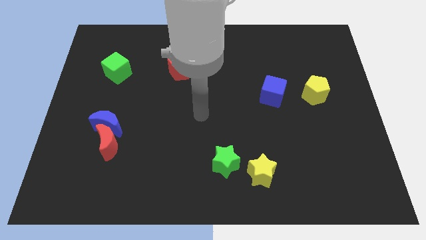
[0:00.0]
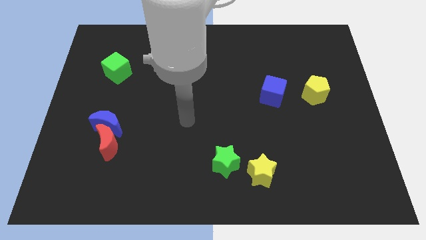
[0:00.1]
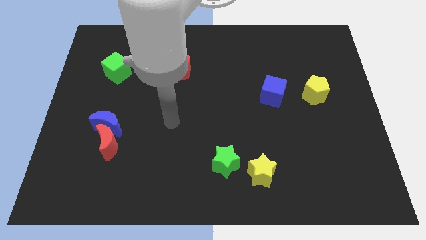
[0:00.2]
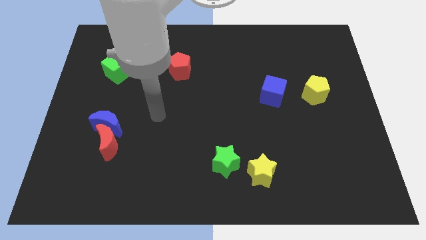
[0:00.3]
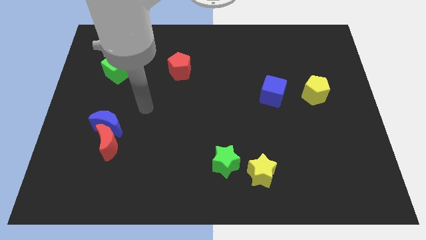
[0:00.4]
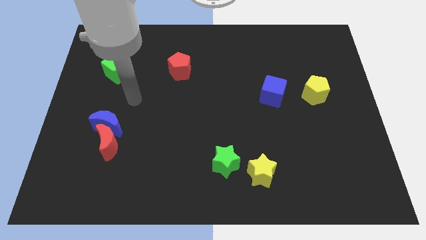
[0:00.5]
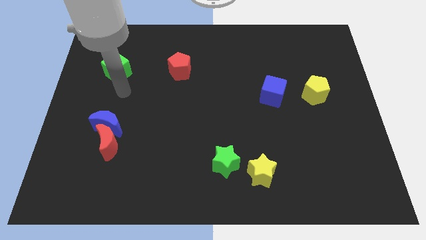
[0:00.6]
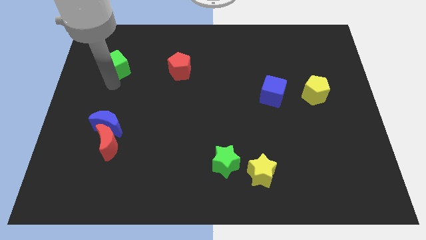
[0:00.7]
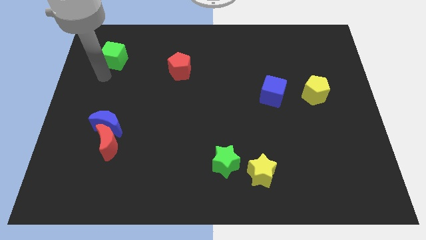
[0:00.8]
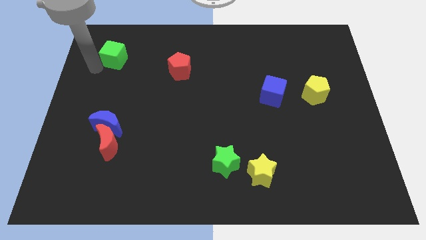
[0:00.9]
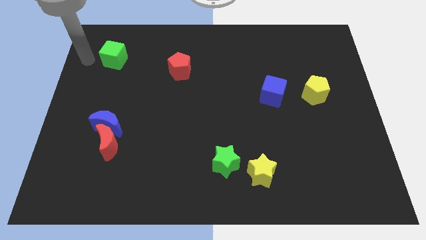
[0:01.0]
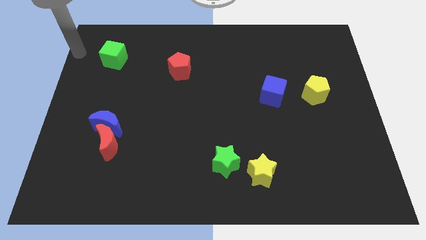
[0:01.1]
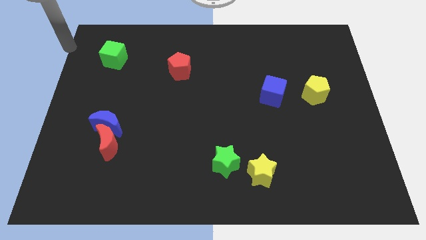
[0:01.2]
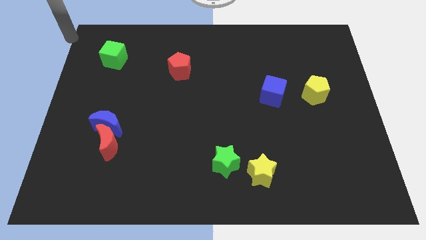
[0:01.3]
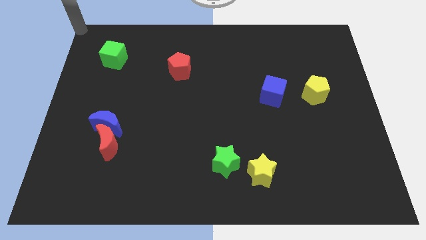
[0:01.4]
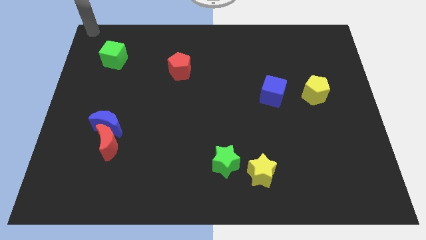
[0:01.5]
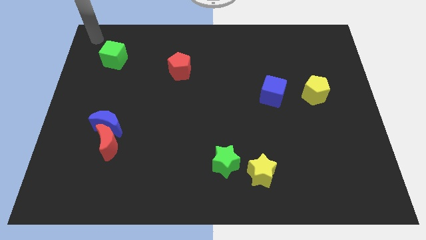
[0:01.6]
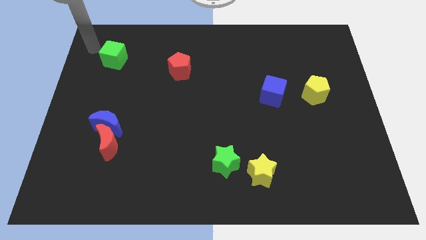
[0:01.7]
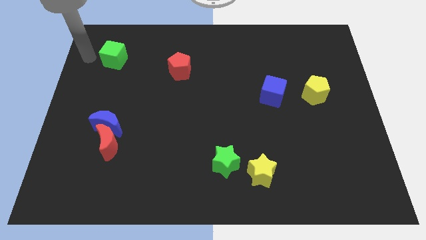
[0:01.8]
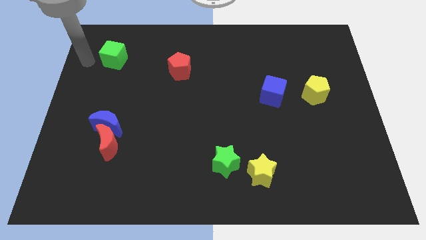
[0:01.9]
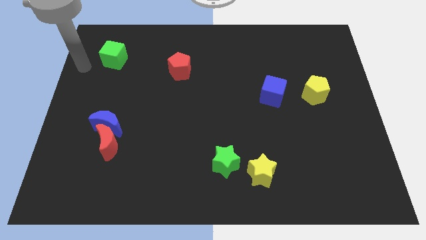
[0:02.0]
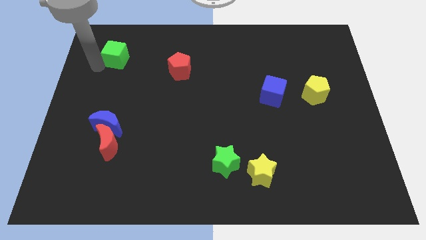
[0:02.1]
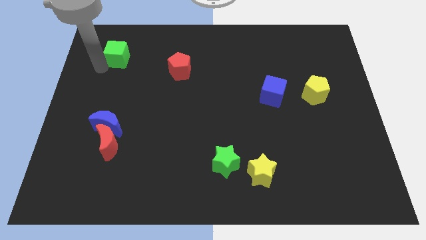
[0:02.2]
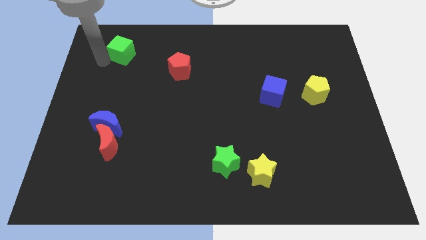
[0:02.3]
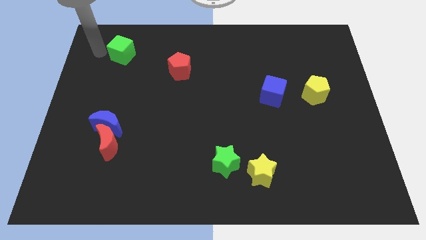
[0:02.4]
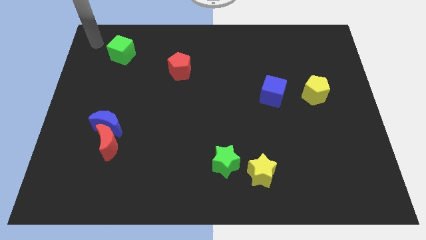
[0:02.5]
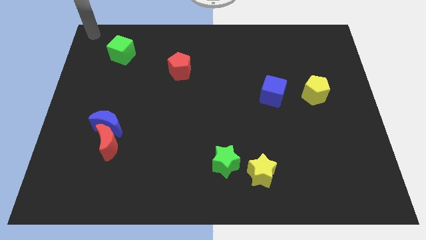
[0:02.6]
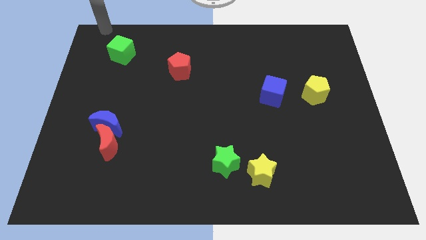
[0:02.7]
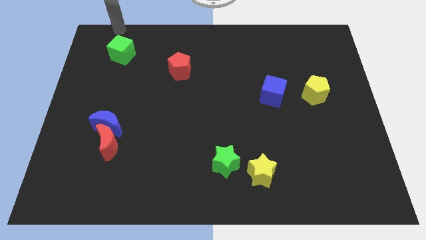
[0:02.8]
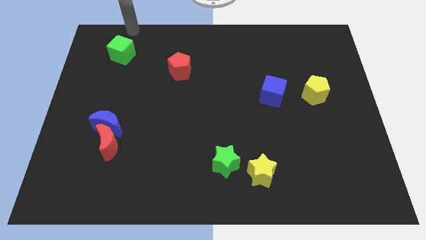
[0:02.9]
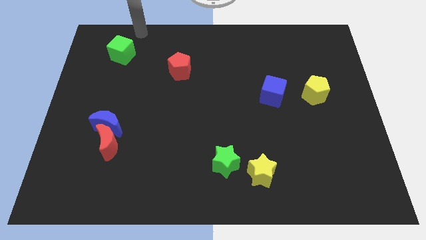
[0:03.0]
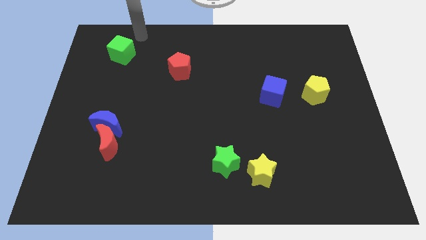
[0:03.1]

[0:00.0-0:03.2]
push the green cube towards the top side of the board

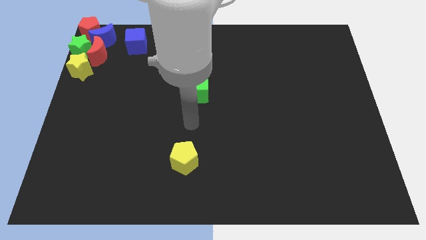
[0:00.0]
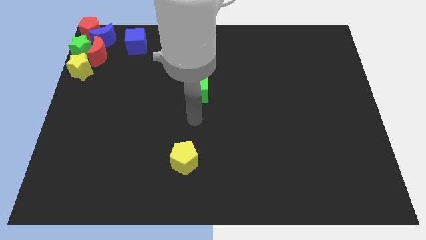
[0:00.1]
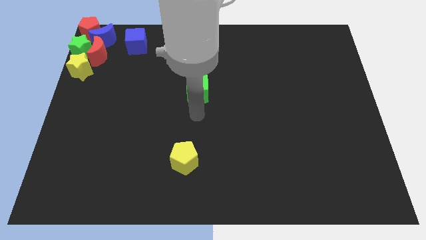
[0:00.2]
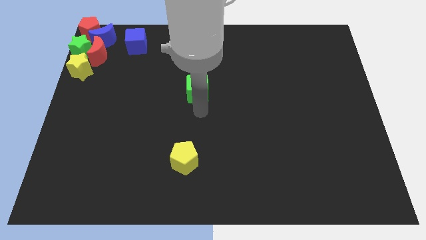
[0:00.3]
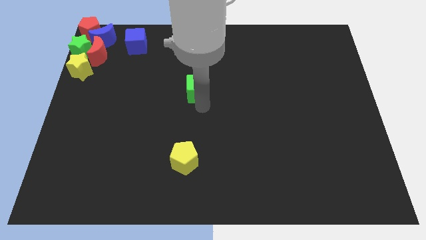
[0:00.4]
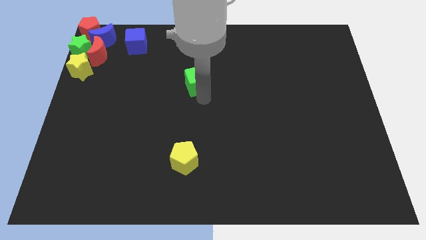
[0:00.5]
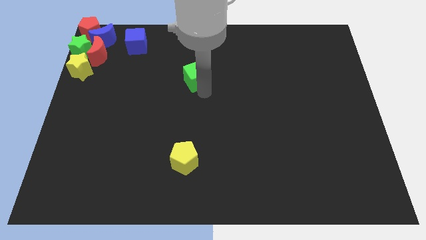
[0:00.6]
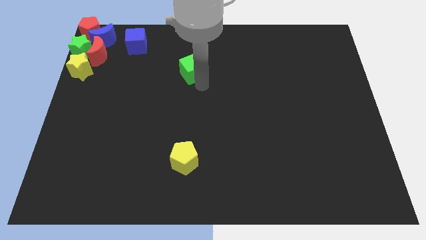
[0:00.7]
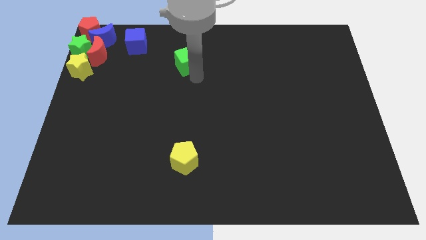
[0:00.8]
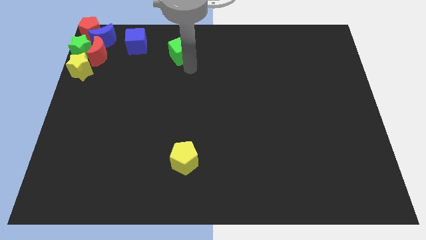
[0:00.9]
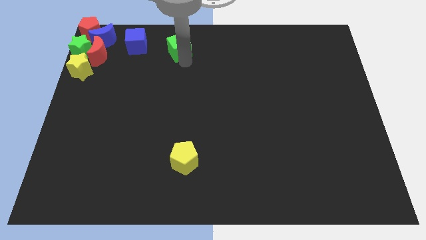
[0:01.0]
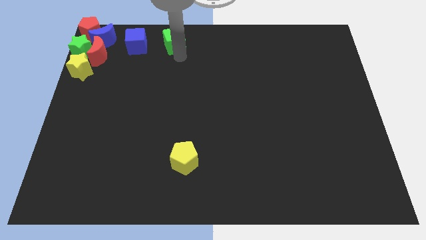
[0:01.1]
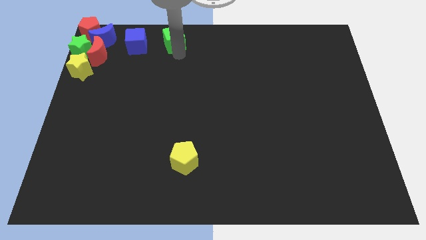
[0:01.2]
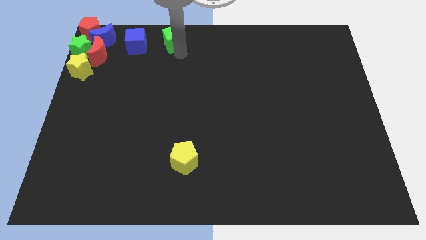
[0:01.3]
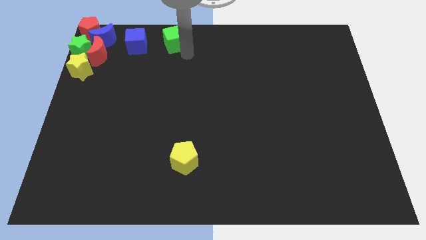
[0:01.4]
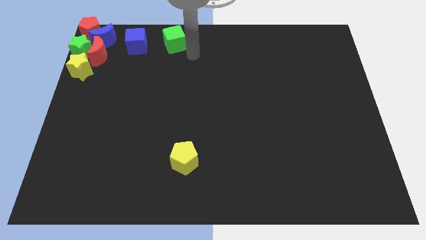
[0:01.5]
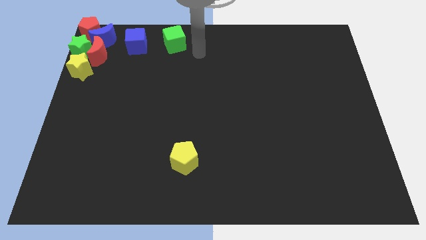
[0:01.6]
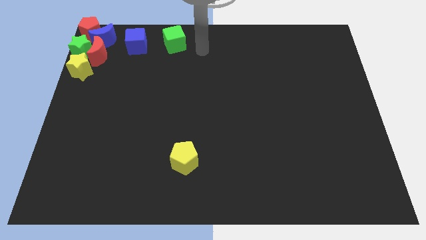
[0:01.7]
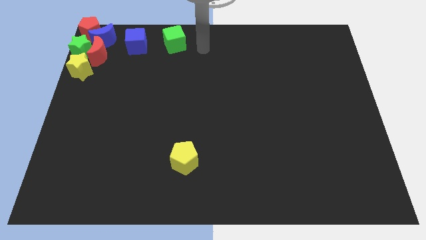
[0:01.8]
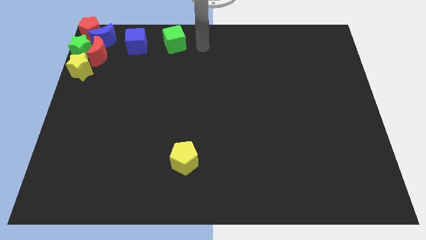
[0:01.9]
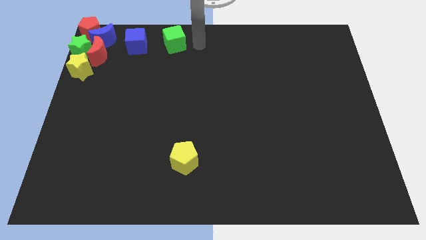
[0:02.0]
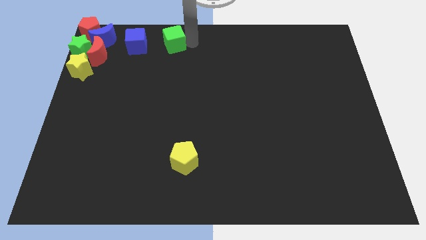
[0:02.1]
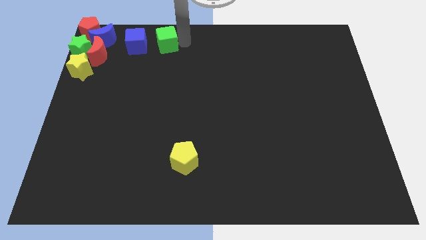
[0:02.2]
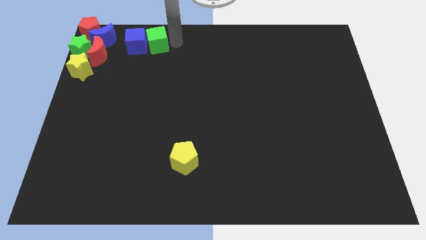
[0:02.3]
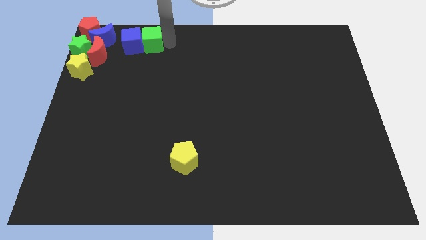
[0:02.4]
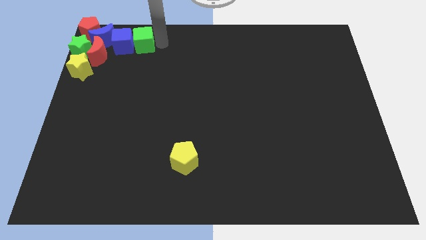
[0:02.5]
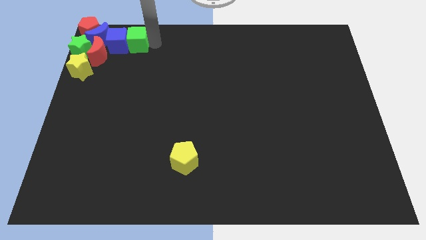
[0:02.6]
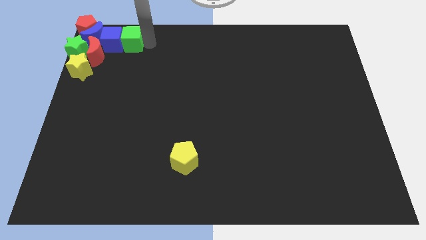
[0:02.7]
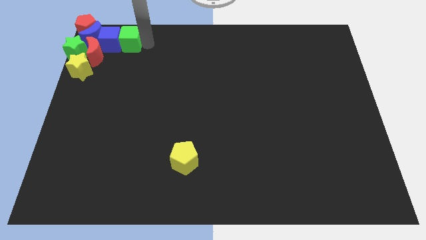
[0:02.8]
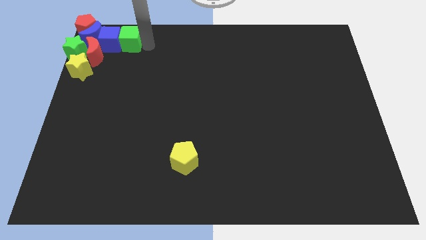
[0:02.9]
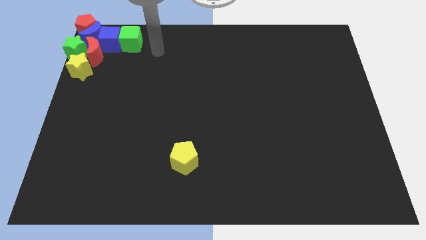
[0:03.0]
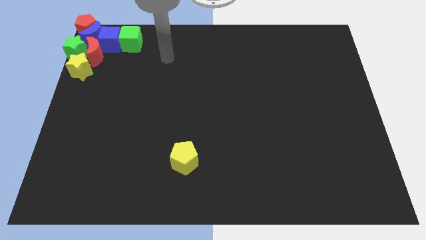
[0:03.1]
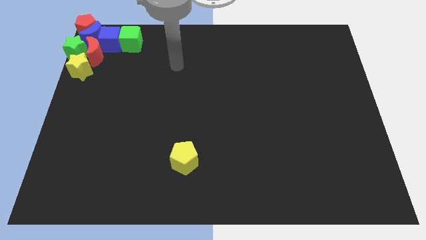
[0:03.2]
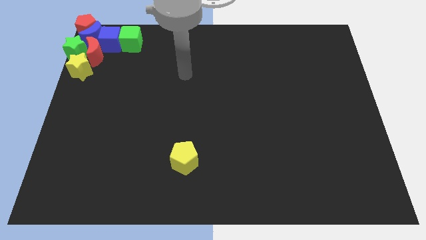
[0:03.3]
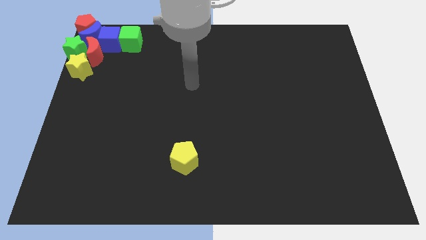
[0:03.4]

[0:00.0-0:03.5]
move the green cube into the blue cube

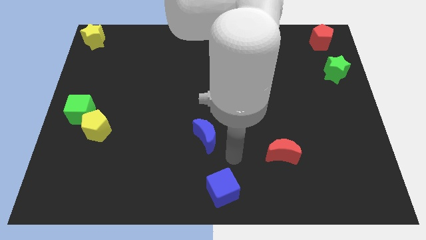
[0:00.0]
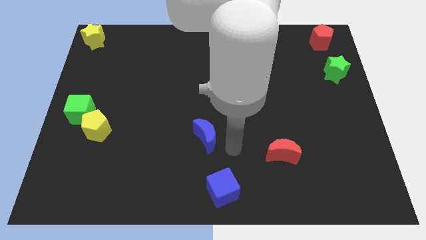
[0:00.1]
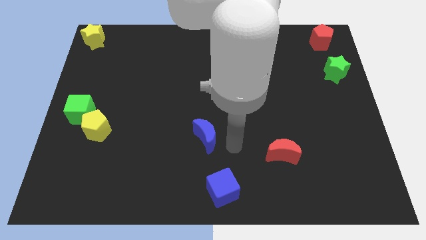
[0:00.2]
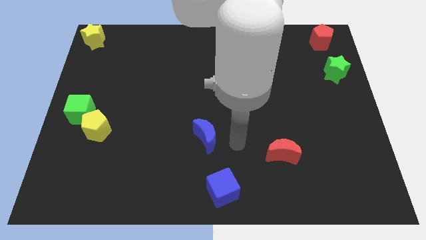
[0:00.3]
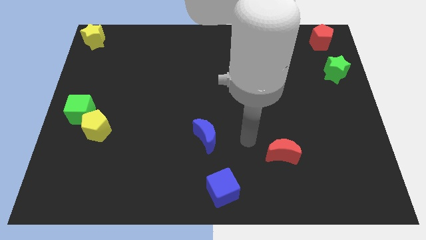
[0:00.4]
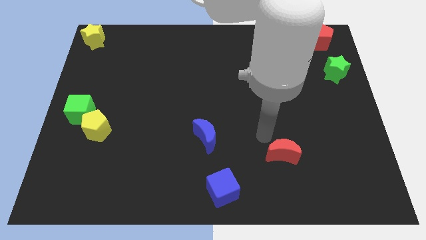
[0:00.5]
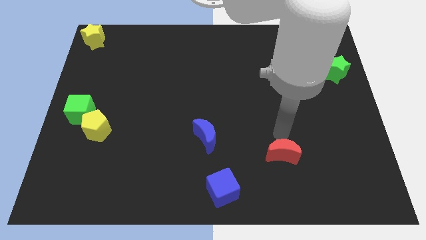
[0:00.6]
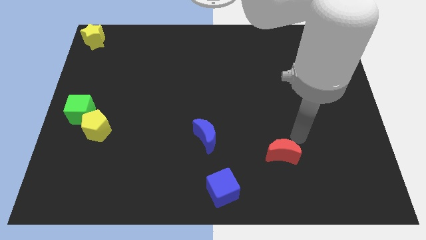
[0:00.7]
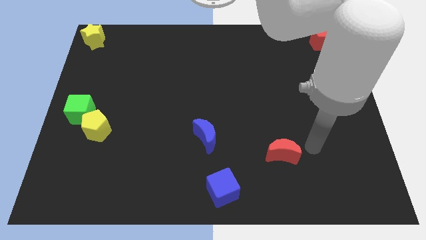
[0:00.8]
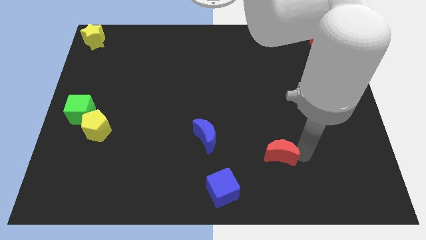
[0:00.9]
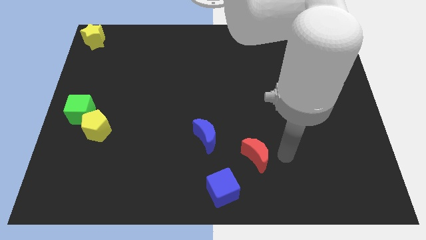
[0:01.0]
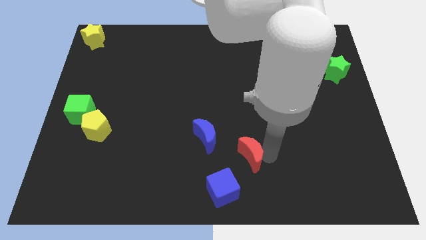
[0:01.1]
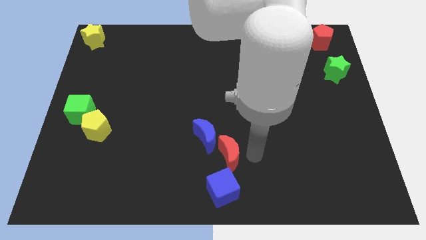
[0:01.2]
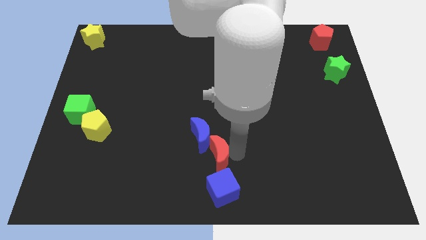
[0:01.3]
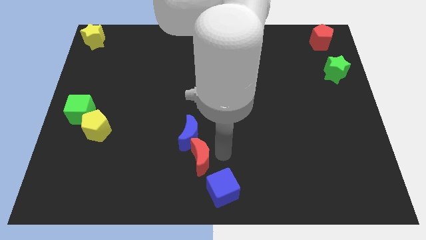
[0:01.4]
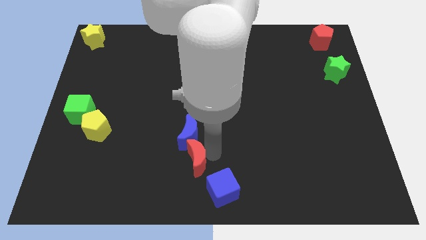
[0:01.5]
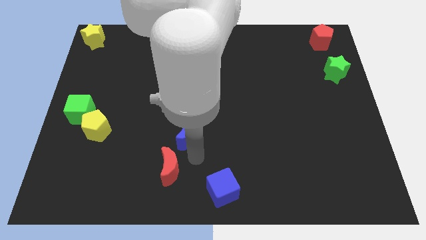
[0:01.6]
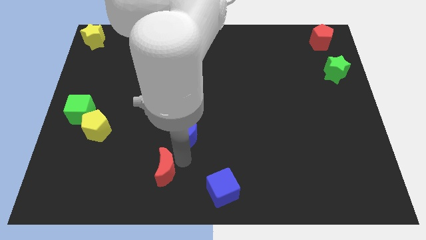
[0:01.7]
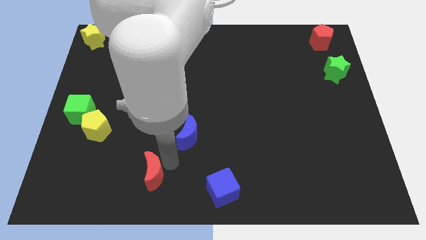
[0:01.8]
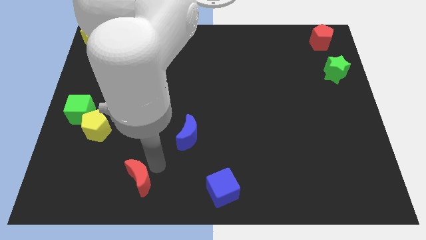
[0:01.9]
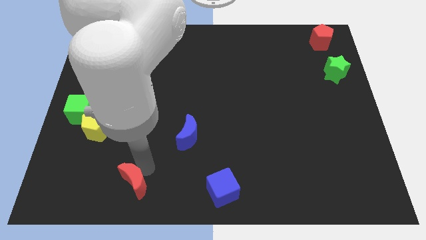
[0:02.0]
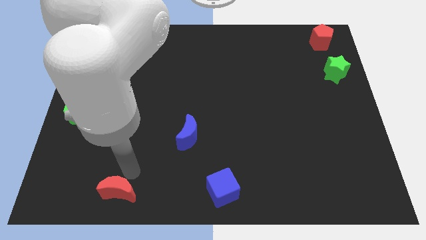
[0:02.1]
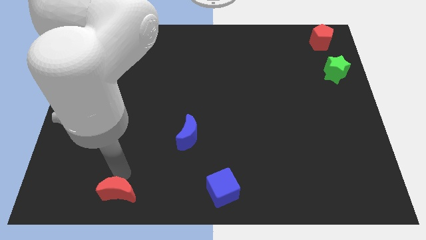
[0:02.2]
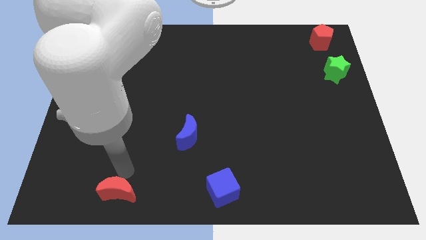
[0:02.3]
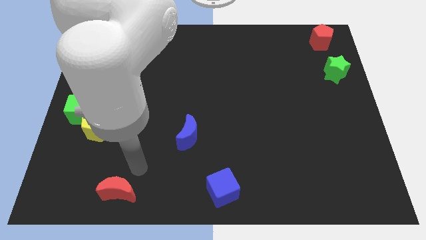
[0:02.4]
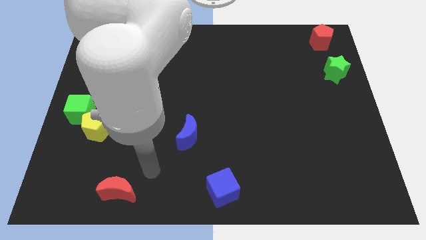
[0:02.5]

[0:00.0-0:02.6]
move the red crescent to the bottom left of the blue crescent
